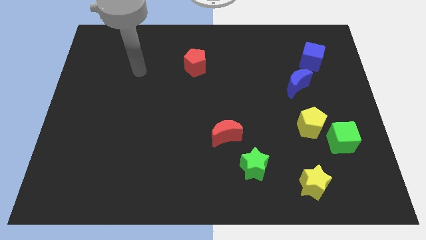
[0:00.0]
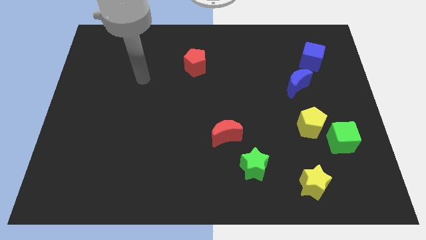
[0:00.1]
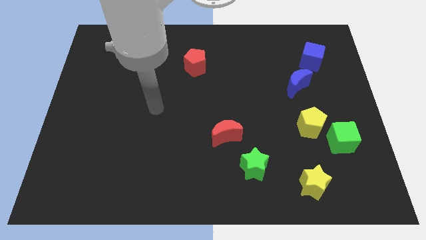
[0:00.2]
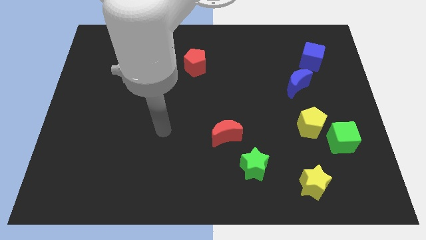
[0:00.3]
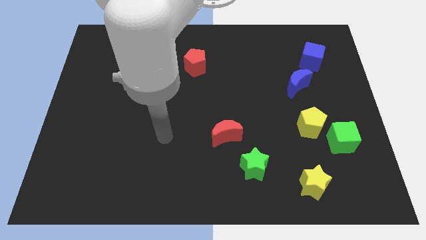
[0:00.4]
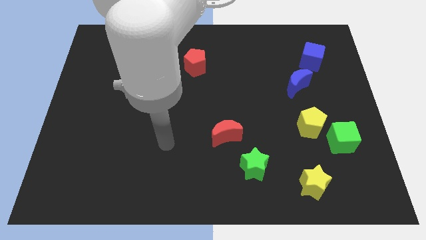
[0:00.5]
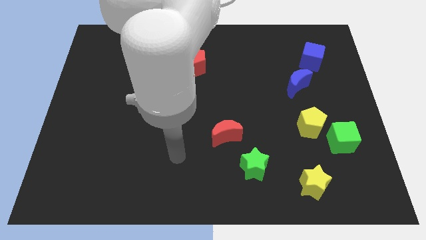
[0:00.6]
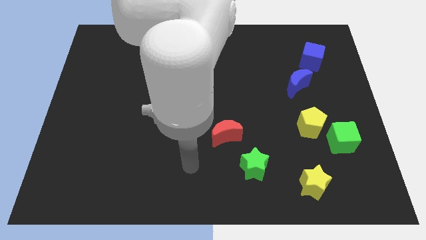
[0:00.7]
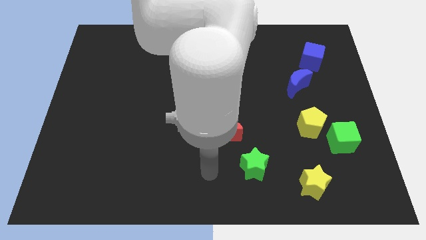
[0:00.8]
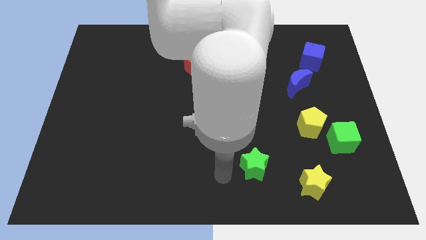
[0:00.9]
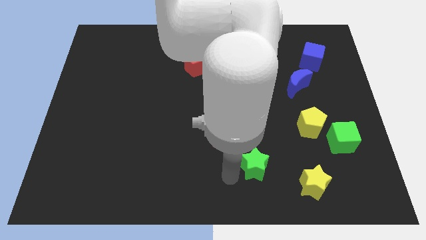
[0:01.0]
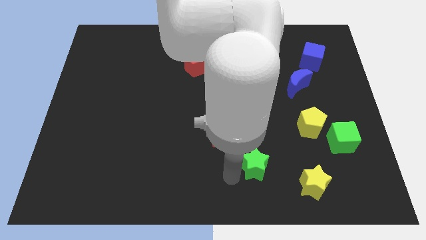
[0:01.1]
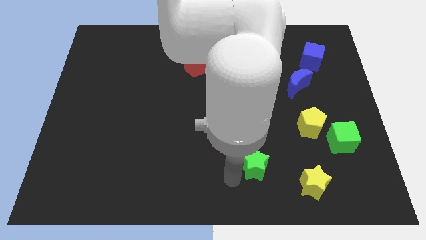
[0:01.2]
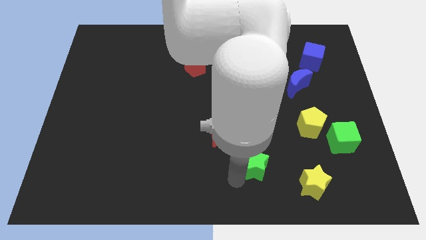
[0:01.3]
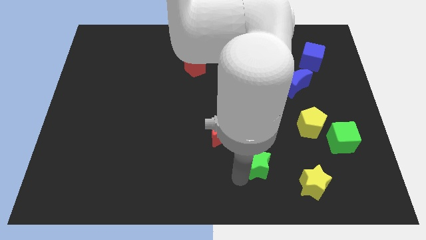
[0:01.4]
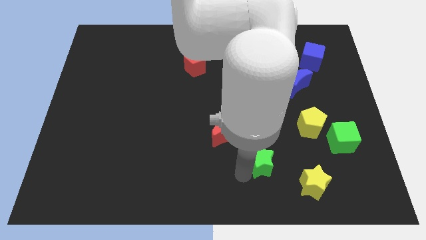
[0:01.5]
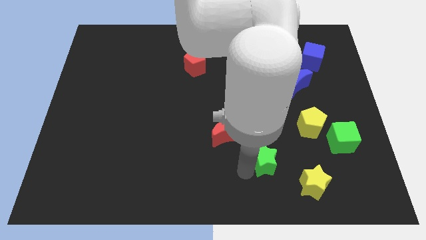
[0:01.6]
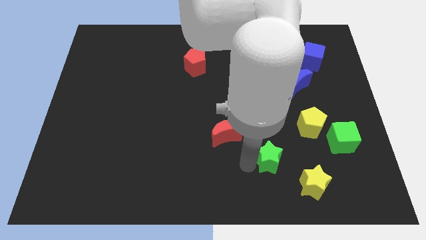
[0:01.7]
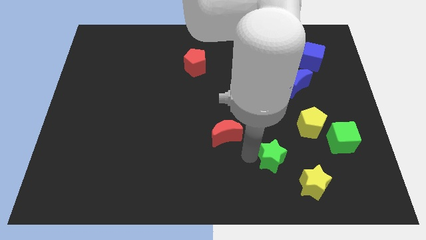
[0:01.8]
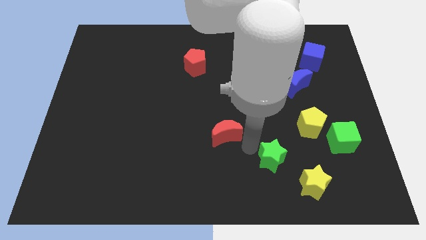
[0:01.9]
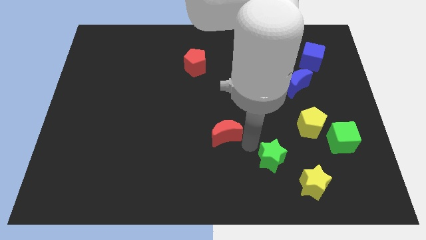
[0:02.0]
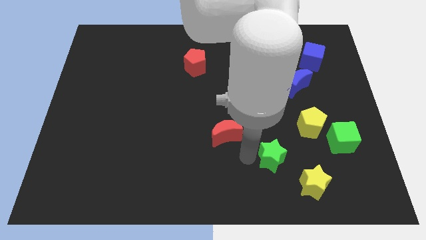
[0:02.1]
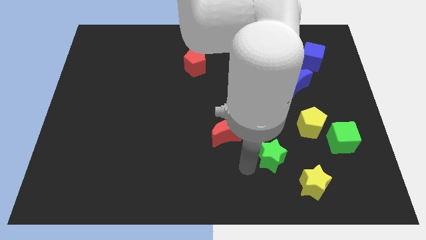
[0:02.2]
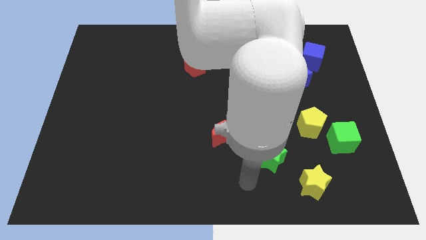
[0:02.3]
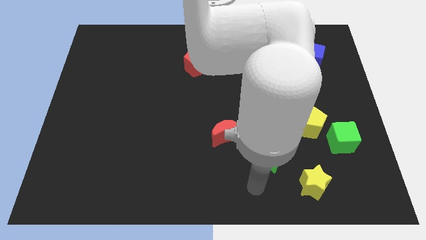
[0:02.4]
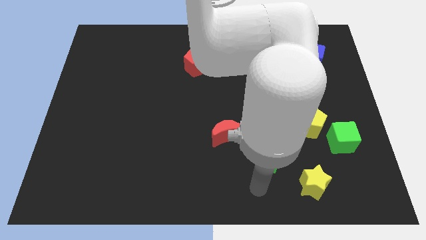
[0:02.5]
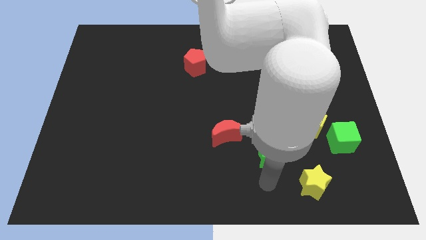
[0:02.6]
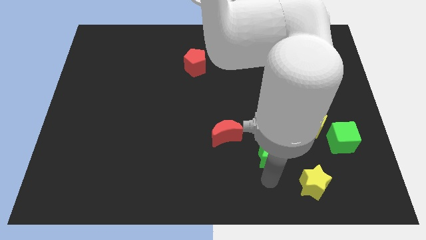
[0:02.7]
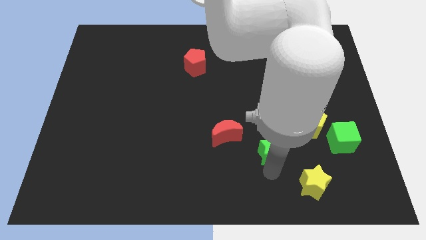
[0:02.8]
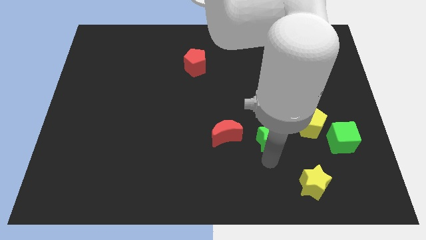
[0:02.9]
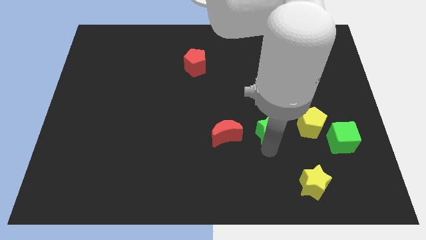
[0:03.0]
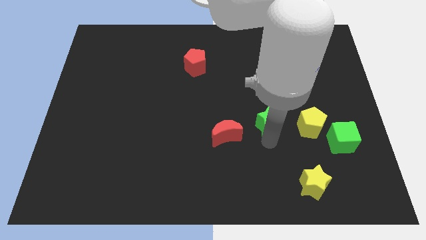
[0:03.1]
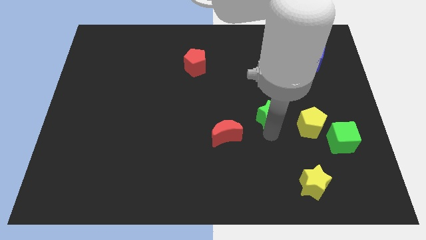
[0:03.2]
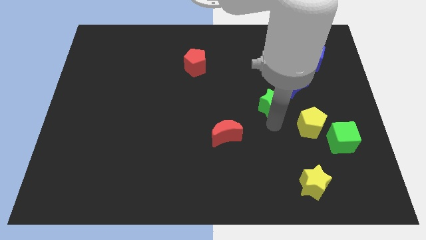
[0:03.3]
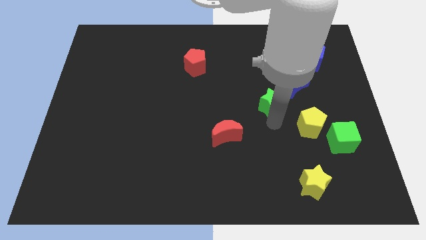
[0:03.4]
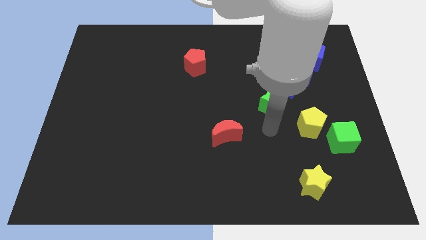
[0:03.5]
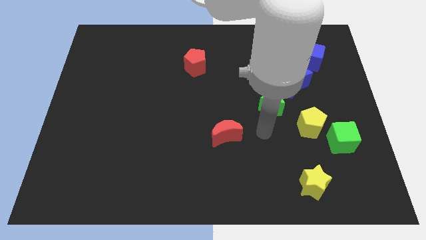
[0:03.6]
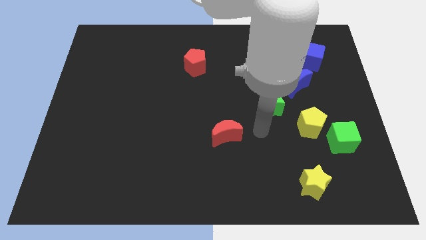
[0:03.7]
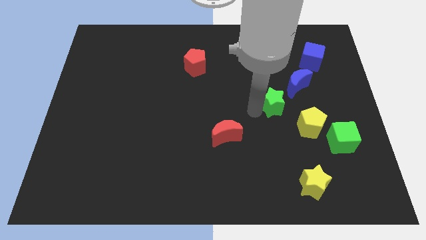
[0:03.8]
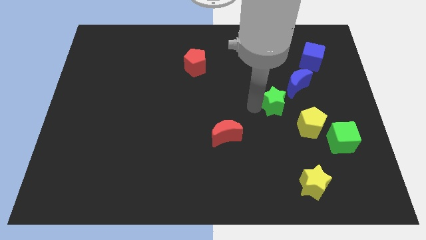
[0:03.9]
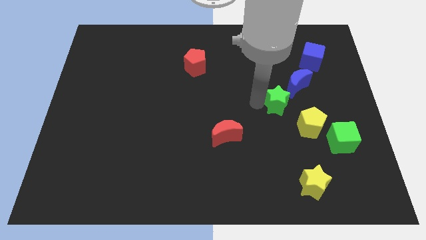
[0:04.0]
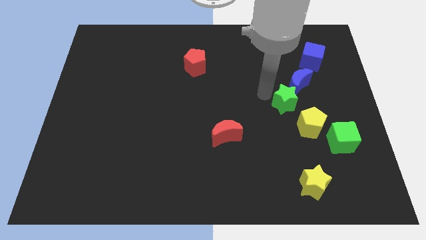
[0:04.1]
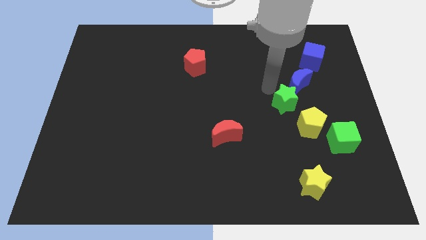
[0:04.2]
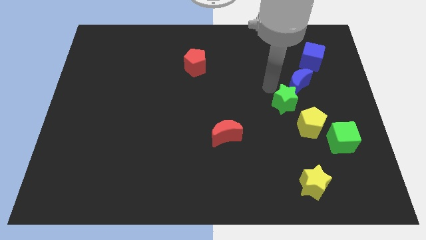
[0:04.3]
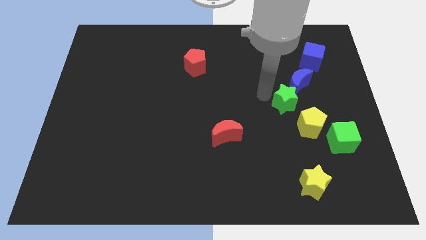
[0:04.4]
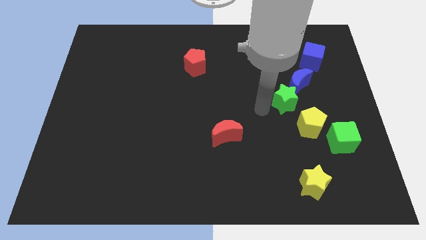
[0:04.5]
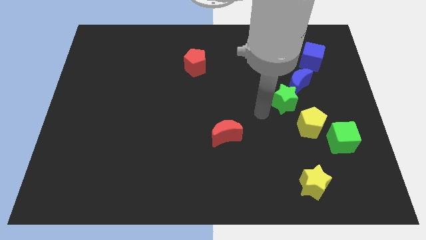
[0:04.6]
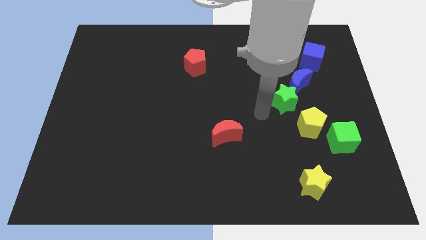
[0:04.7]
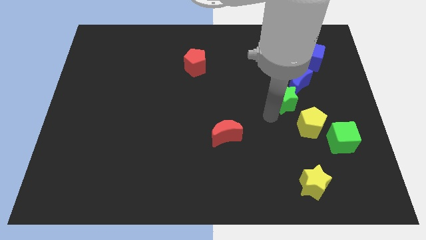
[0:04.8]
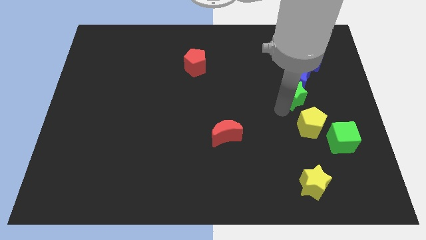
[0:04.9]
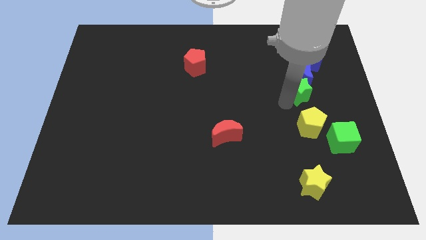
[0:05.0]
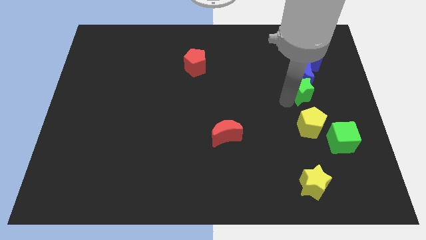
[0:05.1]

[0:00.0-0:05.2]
slide the green star next to the blue moon

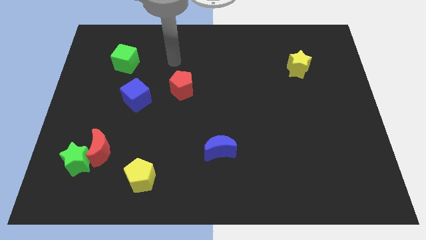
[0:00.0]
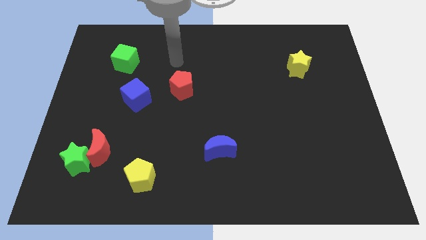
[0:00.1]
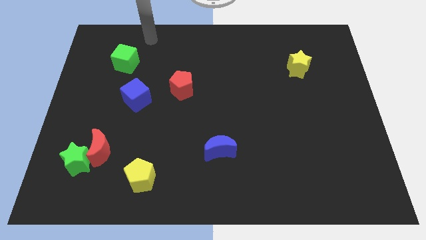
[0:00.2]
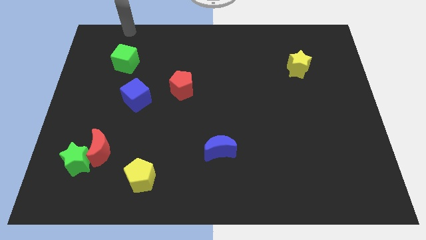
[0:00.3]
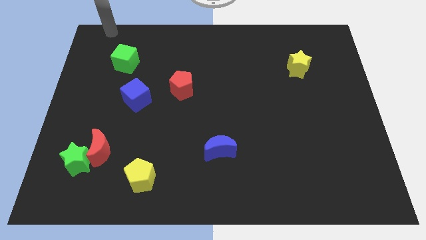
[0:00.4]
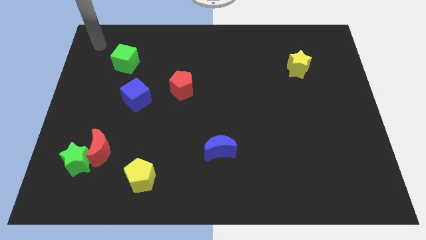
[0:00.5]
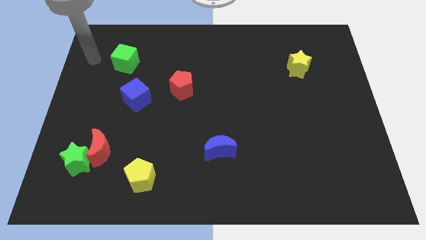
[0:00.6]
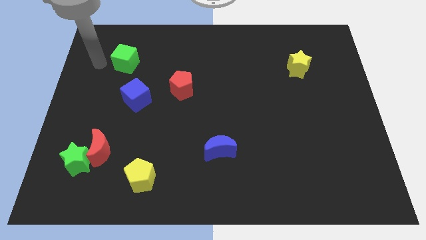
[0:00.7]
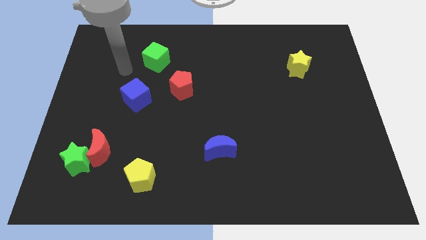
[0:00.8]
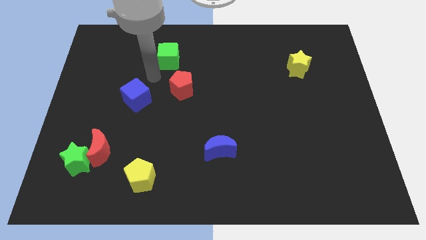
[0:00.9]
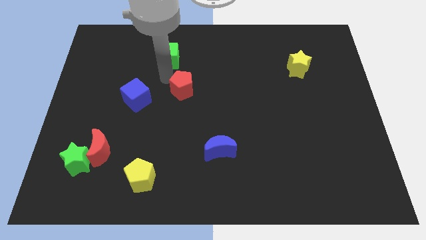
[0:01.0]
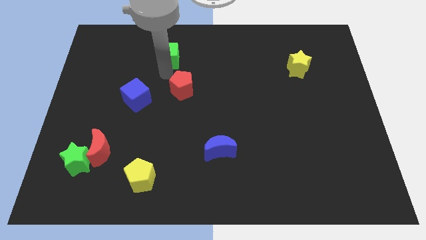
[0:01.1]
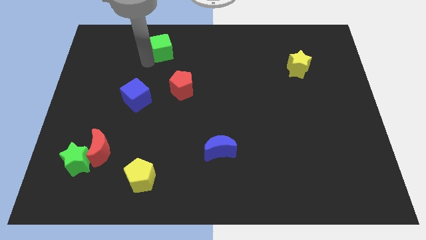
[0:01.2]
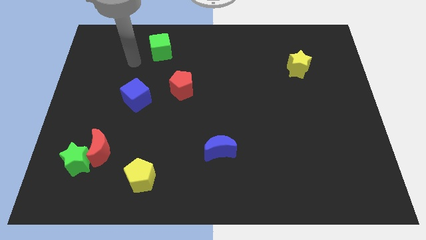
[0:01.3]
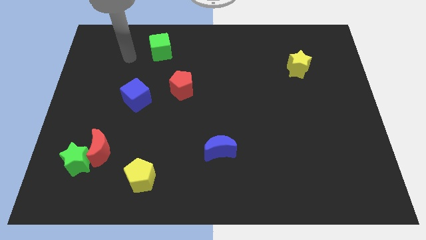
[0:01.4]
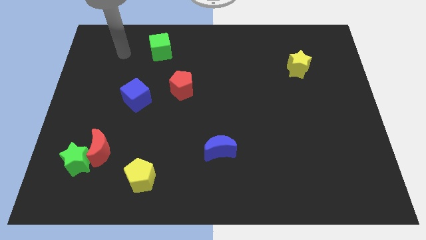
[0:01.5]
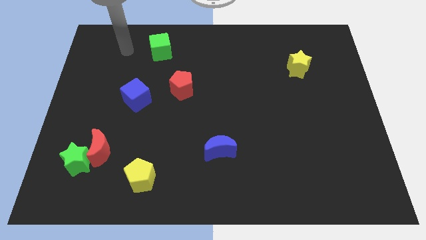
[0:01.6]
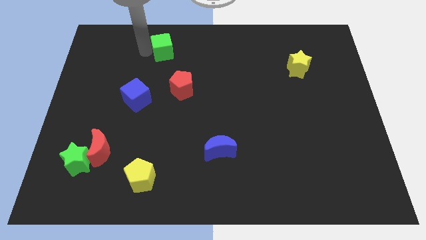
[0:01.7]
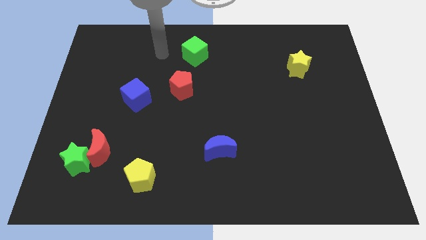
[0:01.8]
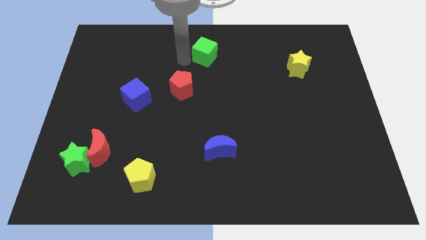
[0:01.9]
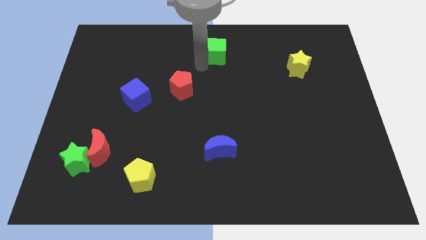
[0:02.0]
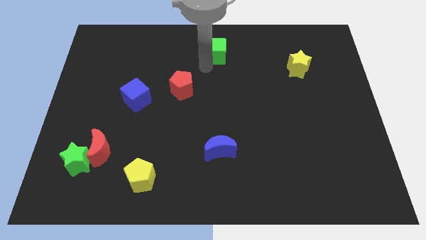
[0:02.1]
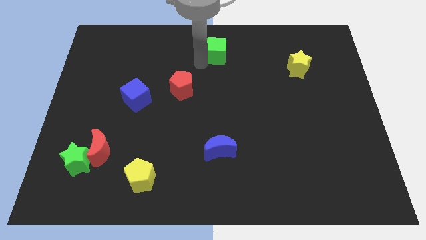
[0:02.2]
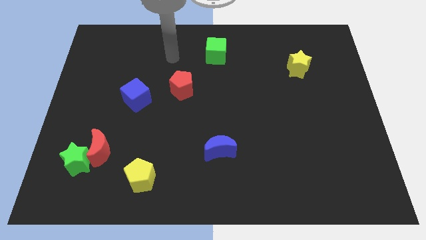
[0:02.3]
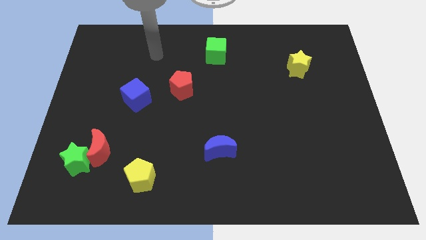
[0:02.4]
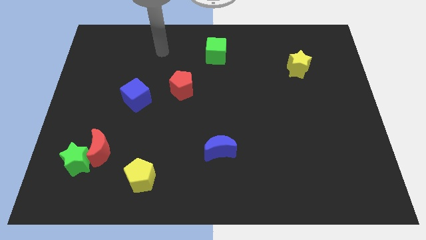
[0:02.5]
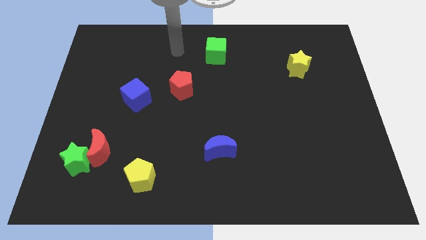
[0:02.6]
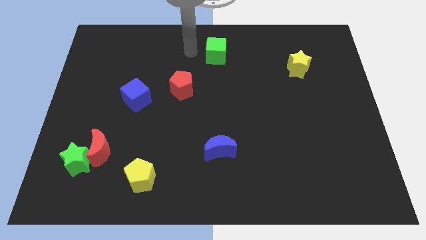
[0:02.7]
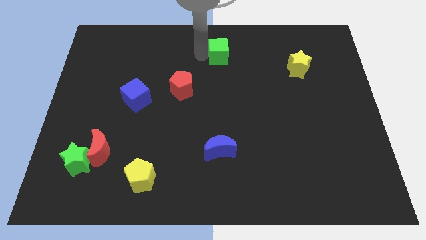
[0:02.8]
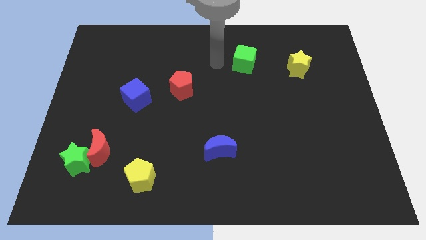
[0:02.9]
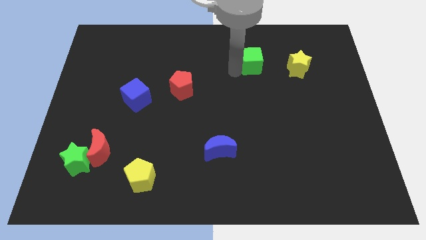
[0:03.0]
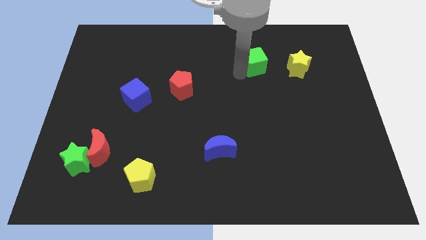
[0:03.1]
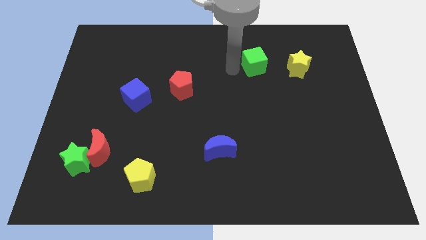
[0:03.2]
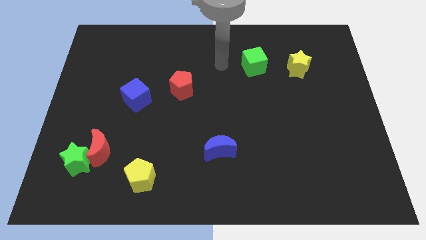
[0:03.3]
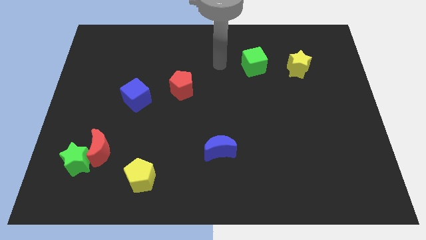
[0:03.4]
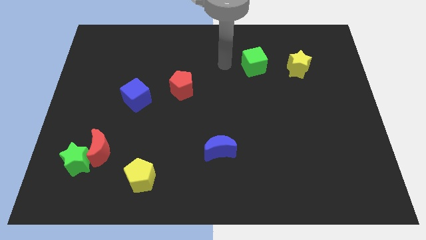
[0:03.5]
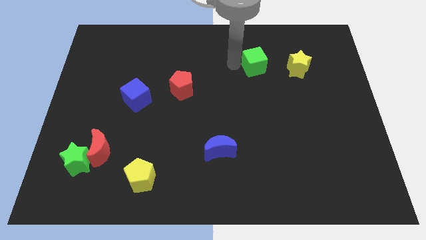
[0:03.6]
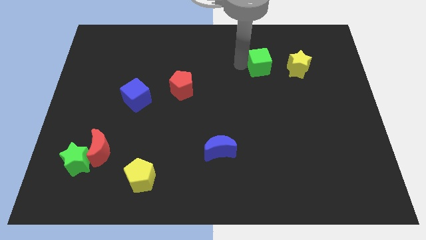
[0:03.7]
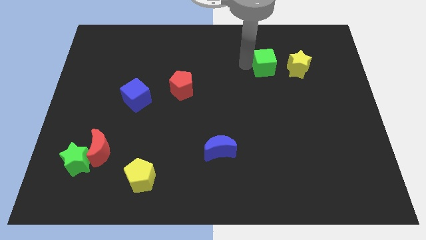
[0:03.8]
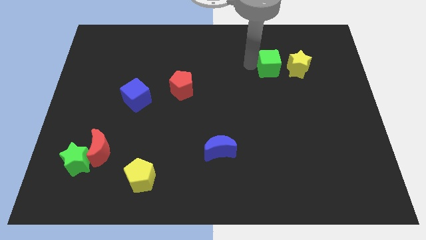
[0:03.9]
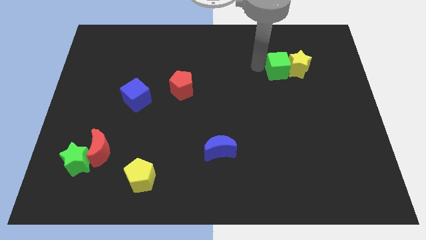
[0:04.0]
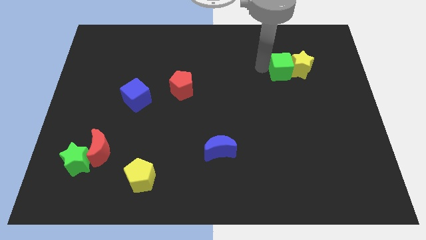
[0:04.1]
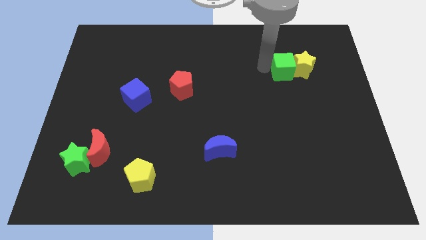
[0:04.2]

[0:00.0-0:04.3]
put the green cube to the yellow star
